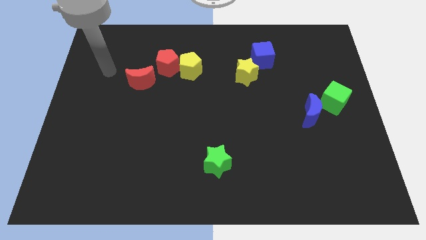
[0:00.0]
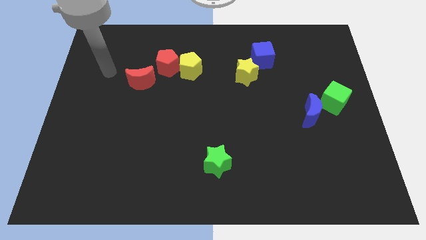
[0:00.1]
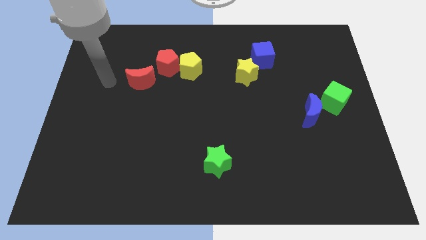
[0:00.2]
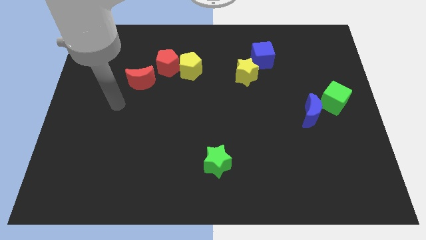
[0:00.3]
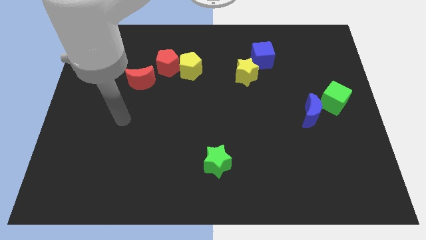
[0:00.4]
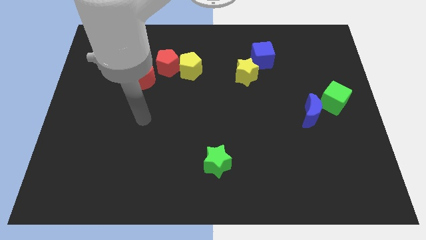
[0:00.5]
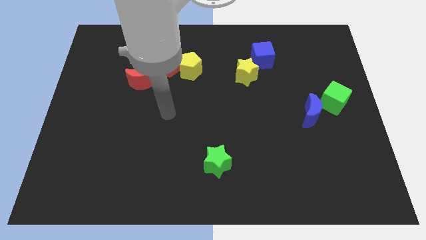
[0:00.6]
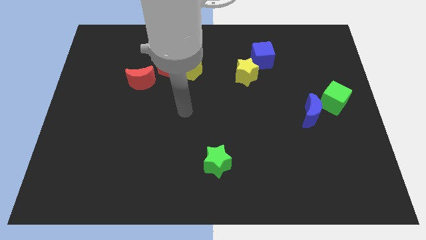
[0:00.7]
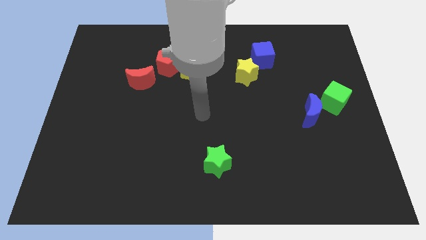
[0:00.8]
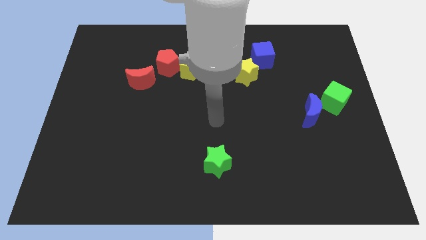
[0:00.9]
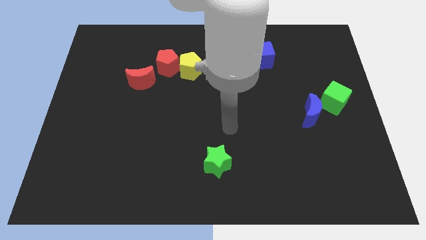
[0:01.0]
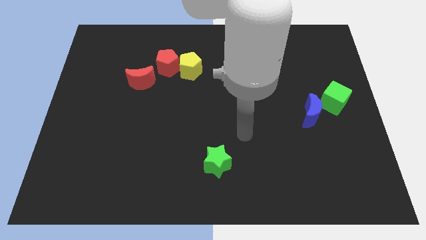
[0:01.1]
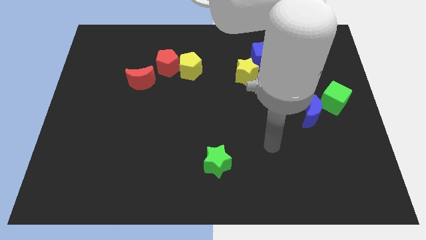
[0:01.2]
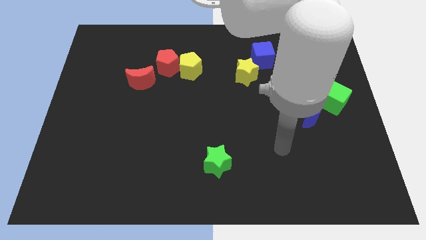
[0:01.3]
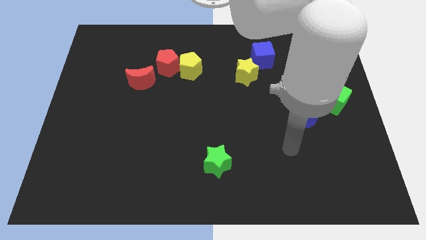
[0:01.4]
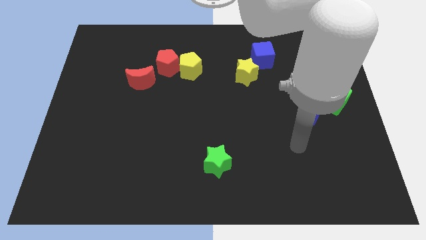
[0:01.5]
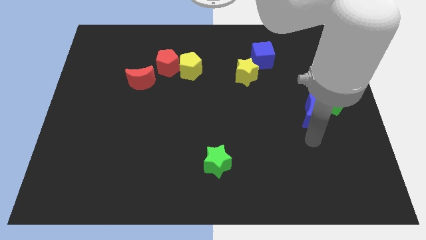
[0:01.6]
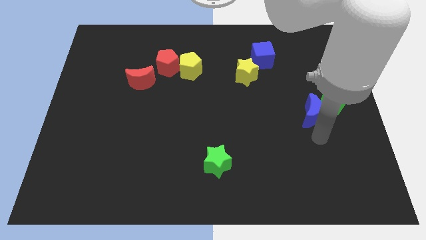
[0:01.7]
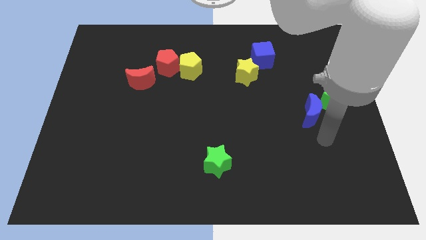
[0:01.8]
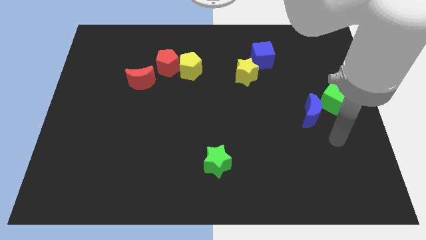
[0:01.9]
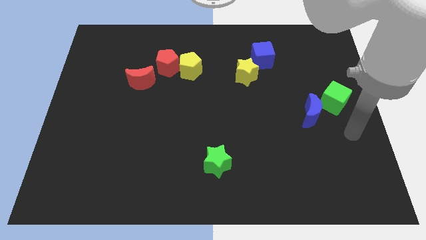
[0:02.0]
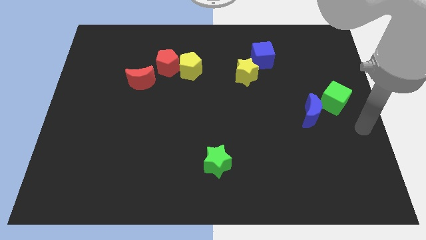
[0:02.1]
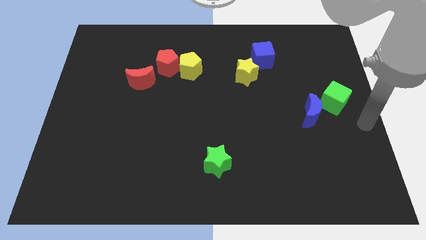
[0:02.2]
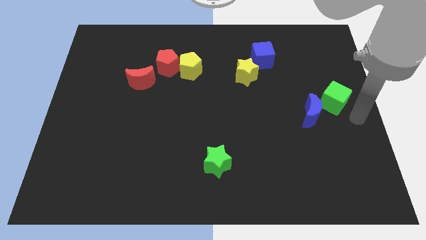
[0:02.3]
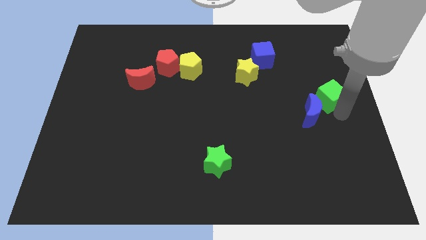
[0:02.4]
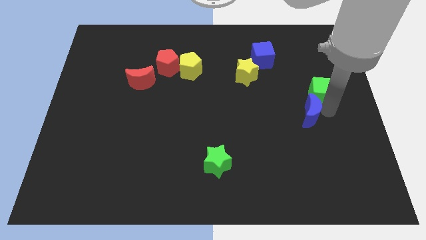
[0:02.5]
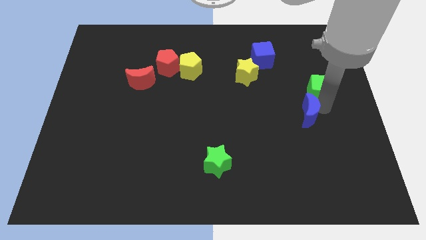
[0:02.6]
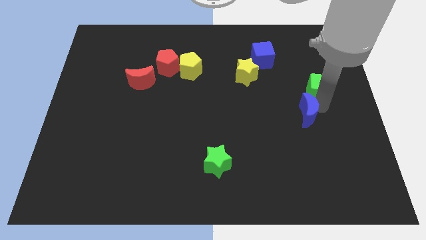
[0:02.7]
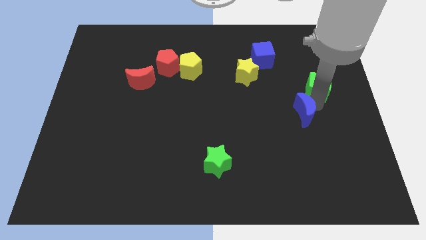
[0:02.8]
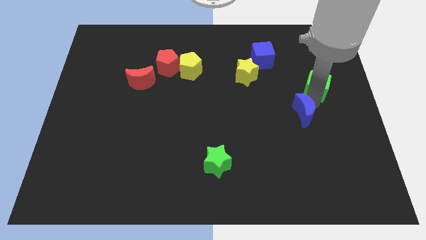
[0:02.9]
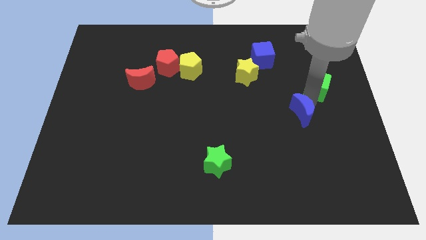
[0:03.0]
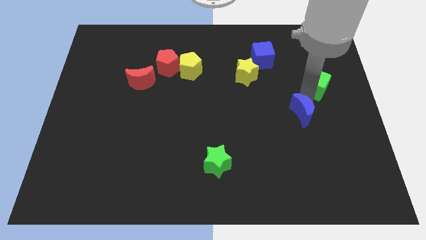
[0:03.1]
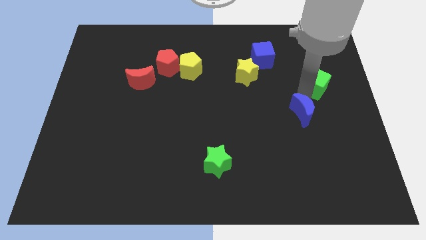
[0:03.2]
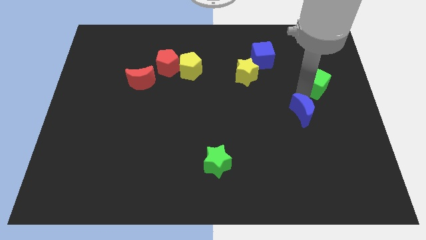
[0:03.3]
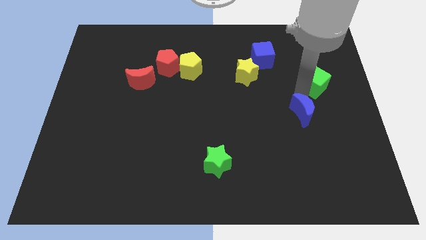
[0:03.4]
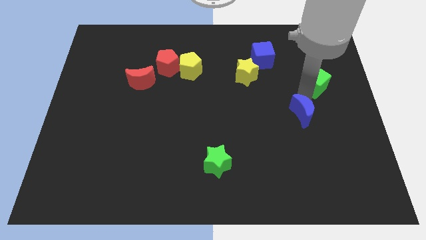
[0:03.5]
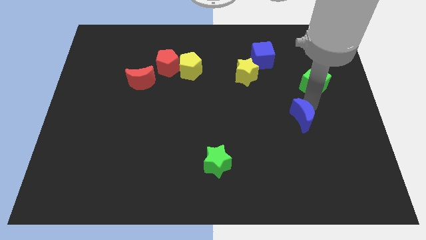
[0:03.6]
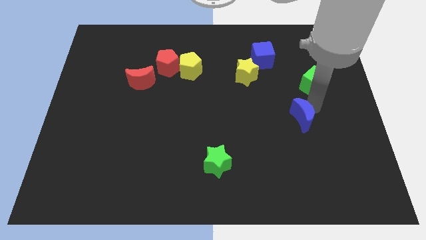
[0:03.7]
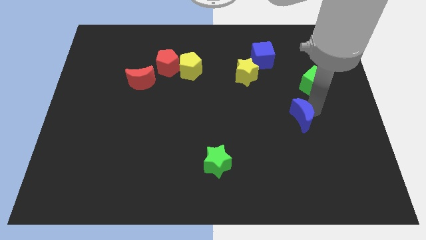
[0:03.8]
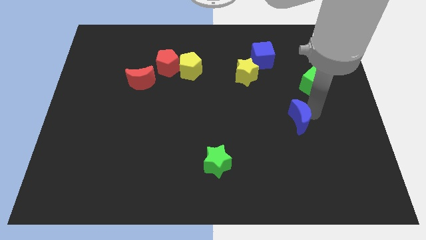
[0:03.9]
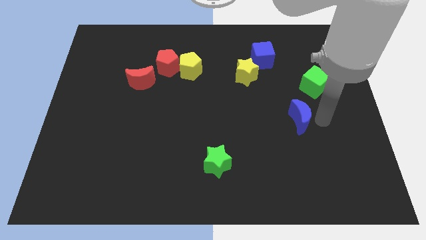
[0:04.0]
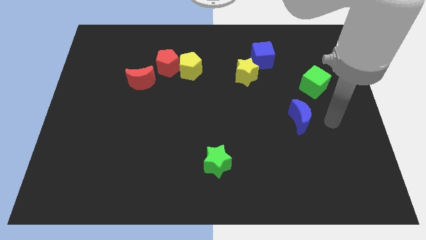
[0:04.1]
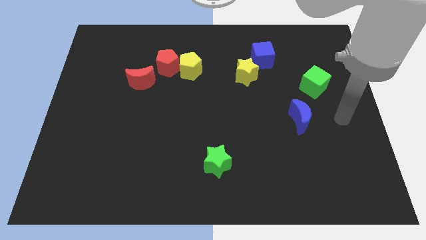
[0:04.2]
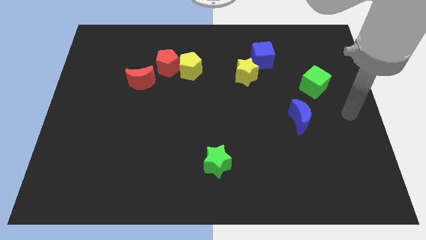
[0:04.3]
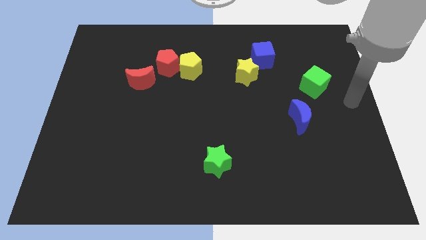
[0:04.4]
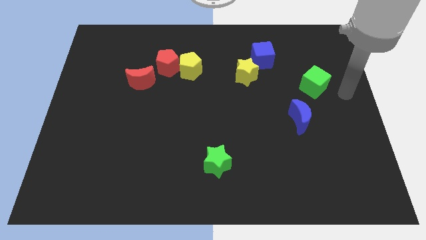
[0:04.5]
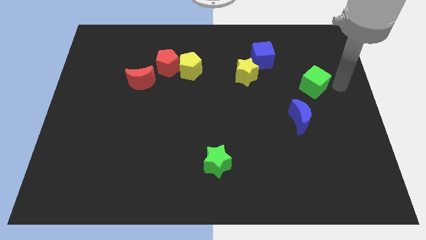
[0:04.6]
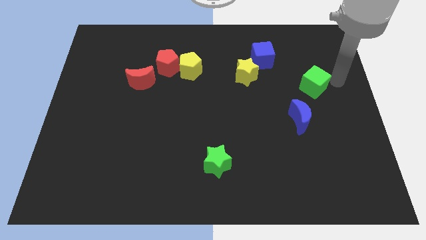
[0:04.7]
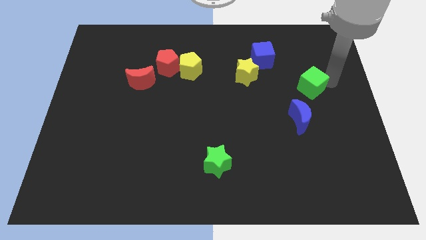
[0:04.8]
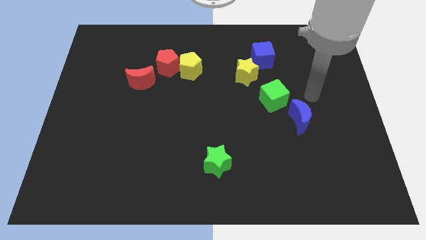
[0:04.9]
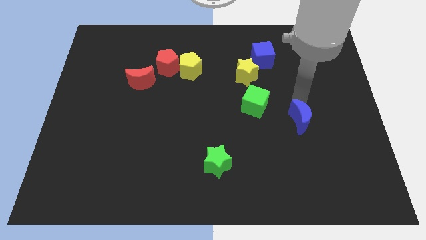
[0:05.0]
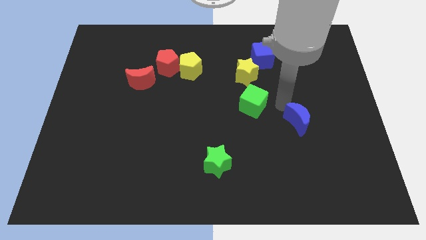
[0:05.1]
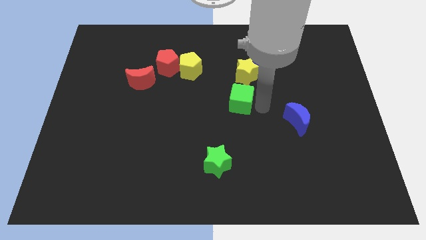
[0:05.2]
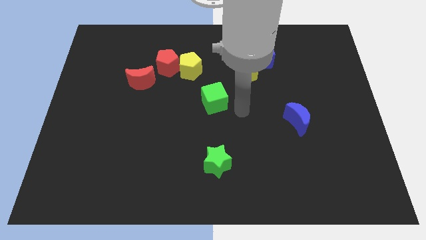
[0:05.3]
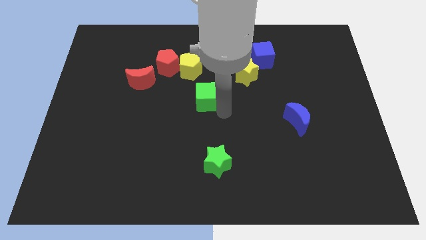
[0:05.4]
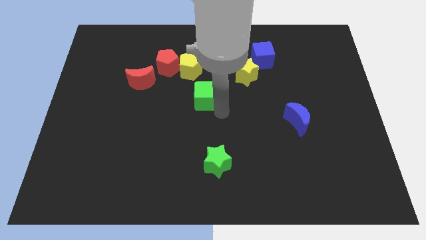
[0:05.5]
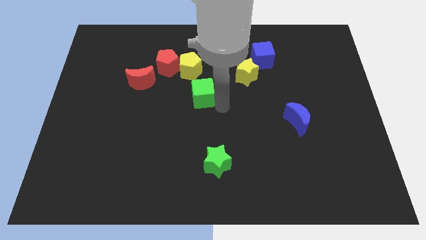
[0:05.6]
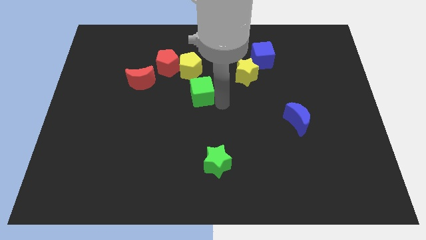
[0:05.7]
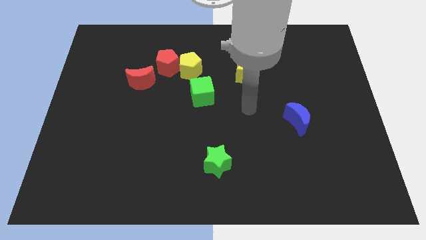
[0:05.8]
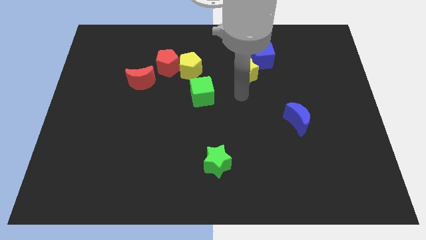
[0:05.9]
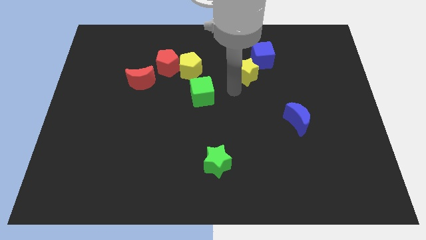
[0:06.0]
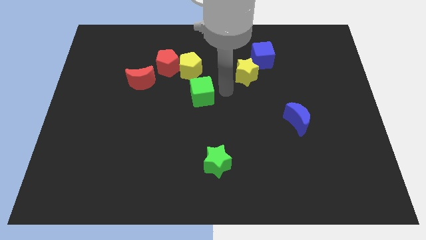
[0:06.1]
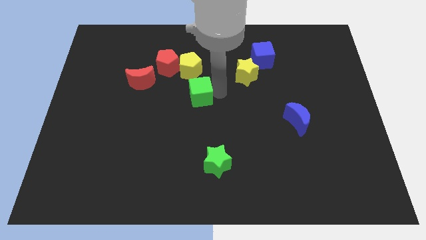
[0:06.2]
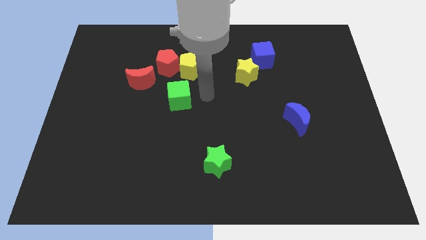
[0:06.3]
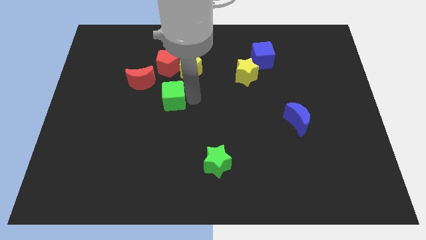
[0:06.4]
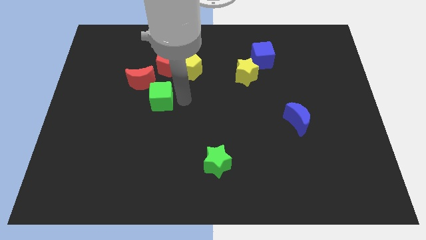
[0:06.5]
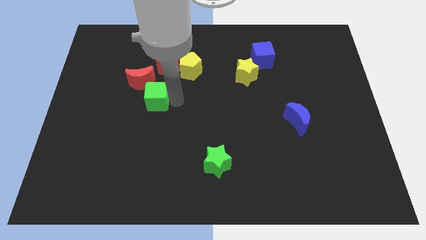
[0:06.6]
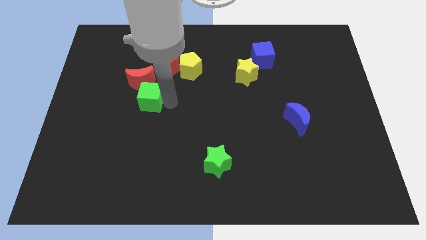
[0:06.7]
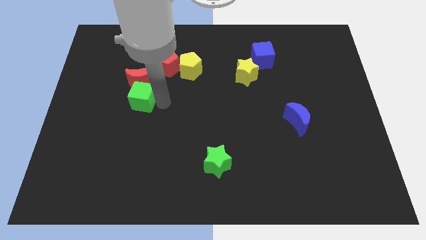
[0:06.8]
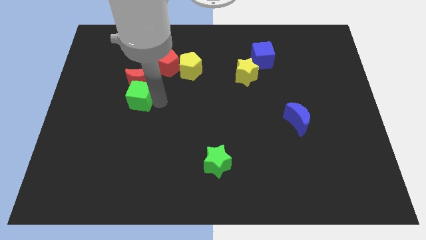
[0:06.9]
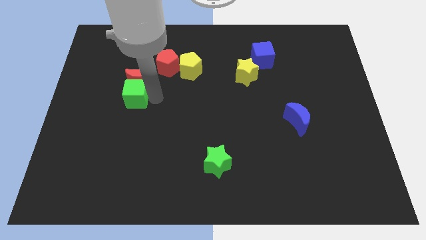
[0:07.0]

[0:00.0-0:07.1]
put the green cube towards the red moon

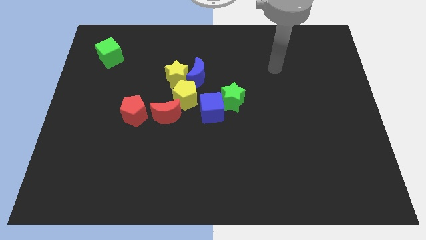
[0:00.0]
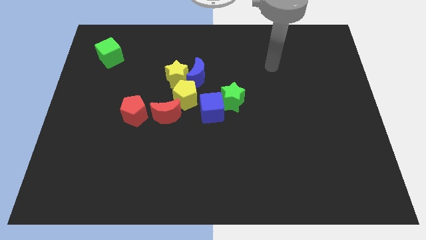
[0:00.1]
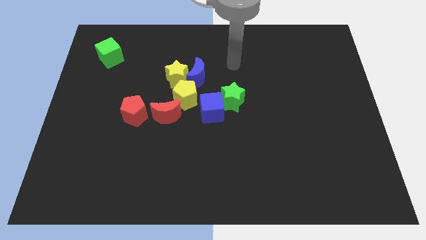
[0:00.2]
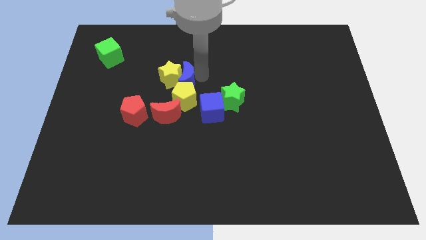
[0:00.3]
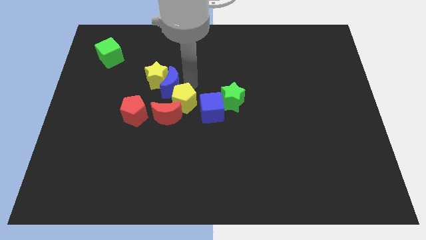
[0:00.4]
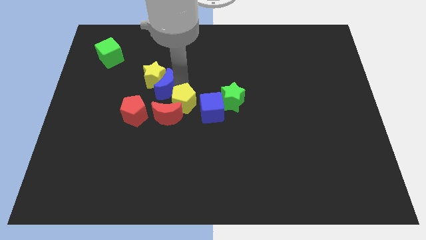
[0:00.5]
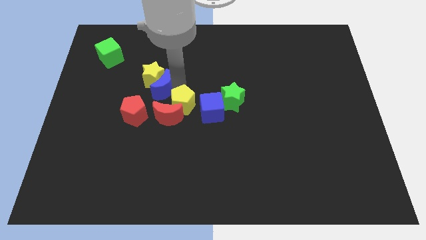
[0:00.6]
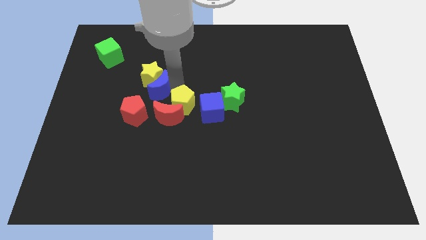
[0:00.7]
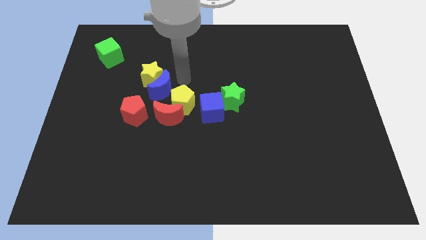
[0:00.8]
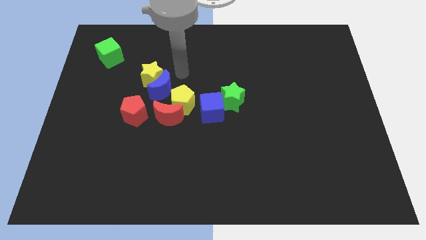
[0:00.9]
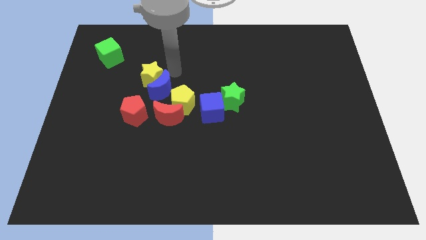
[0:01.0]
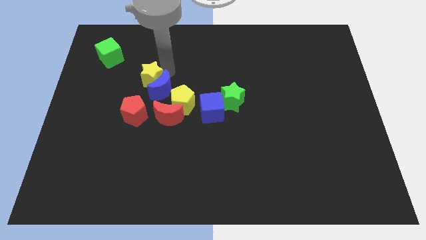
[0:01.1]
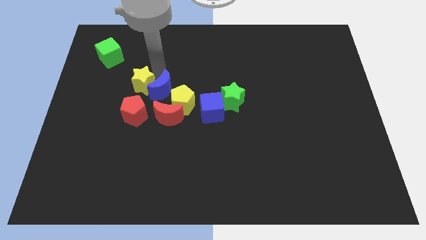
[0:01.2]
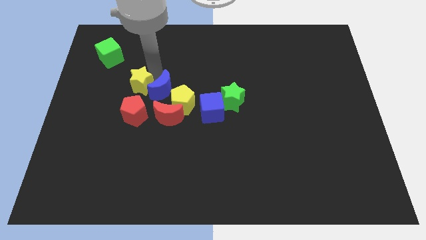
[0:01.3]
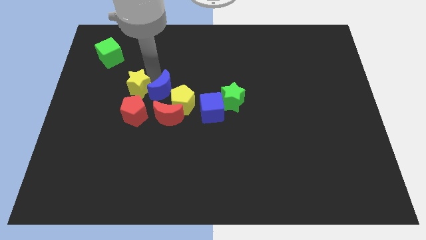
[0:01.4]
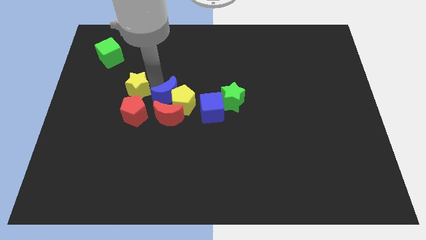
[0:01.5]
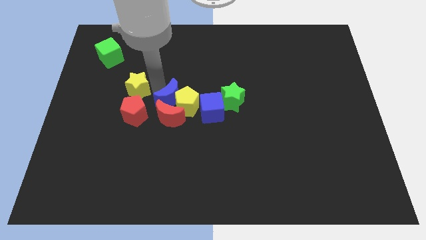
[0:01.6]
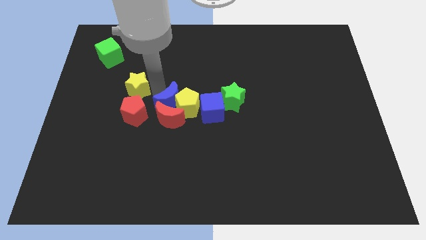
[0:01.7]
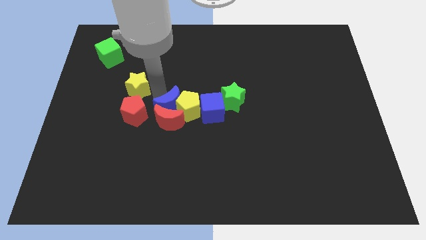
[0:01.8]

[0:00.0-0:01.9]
put the blue moon next to the red moon
